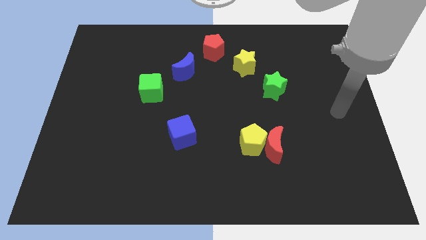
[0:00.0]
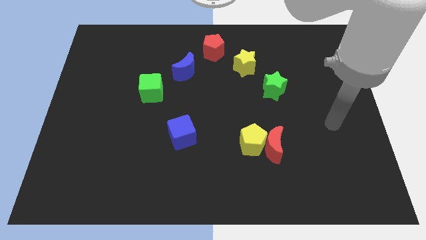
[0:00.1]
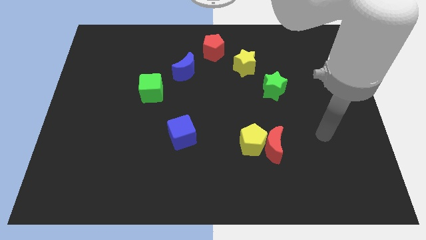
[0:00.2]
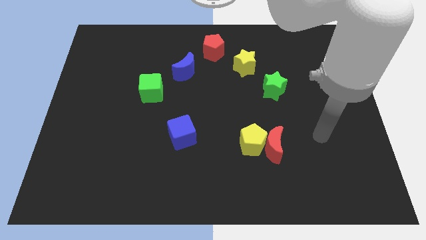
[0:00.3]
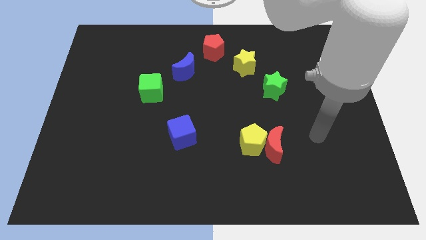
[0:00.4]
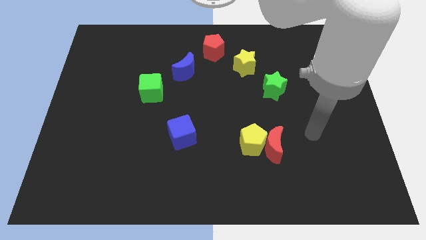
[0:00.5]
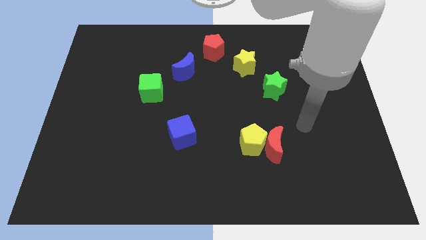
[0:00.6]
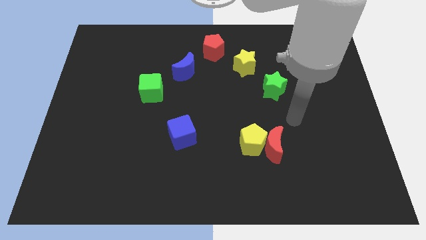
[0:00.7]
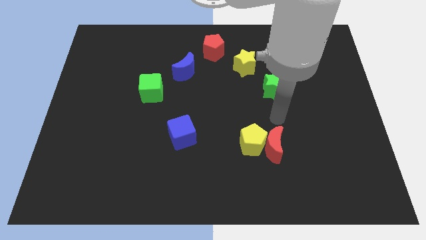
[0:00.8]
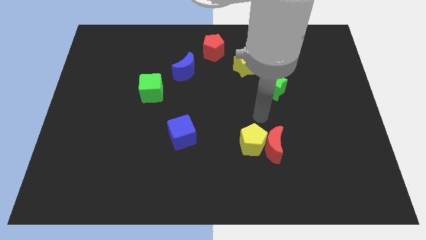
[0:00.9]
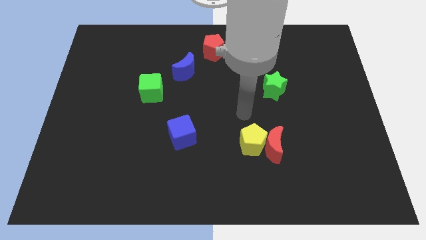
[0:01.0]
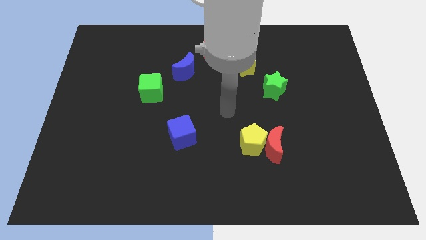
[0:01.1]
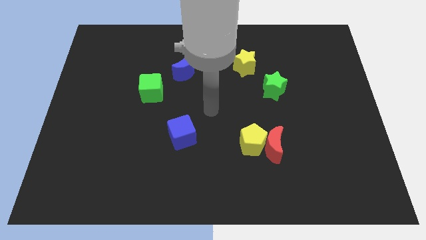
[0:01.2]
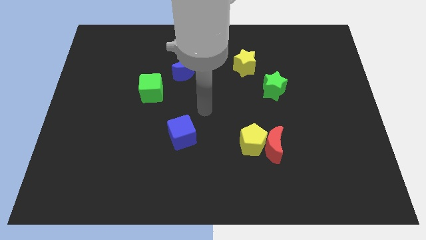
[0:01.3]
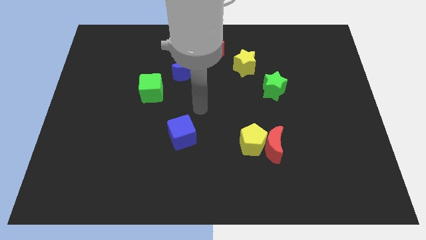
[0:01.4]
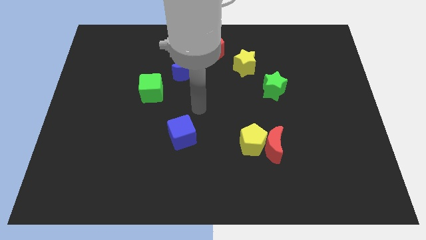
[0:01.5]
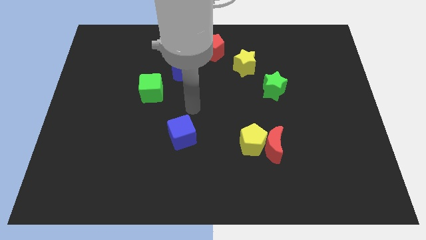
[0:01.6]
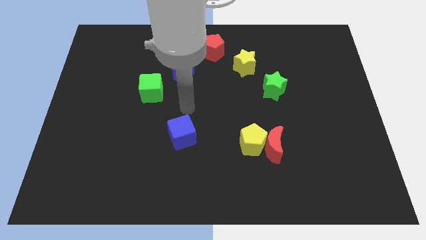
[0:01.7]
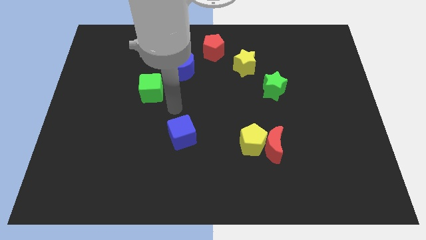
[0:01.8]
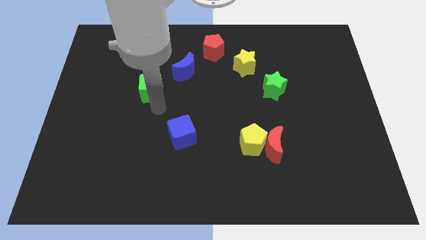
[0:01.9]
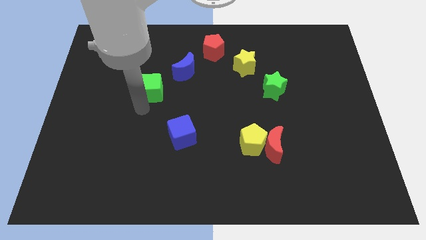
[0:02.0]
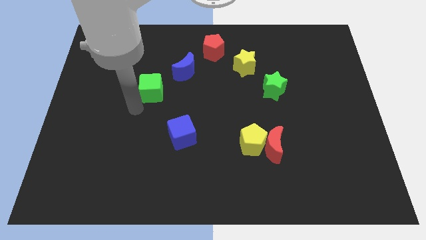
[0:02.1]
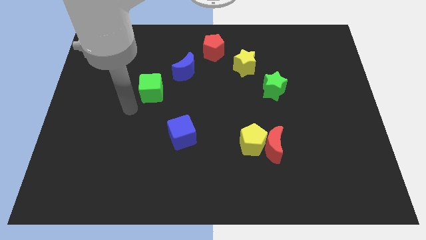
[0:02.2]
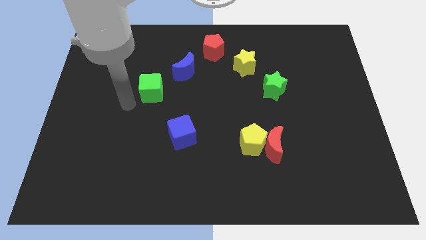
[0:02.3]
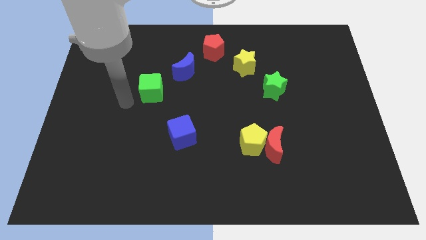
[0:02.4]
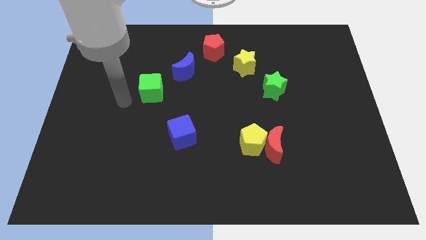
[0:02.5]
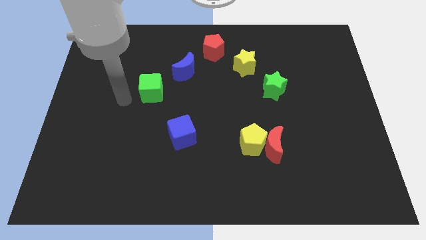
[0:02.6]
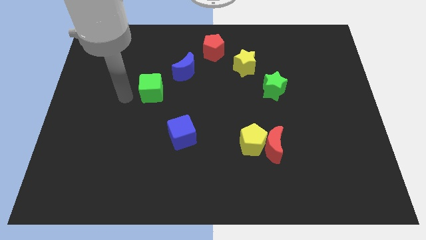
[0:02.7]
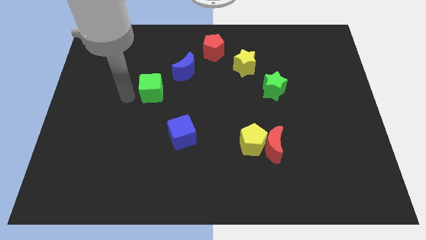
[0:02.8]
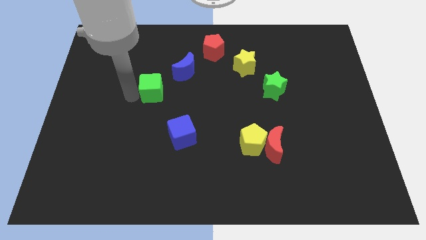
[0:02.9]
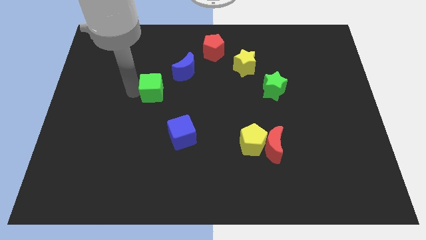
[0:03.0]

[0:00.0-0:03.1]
slide the arm to the left of green cube

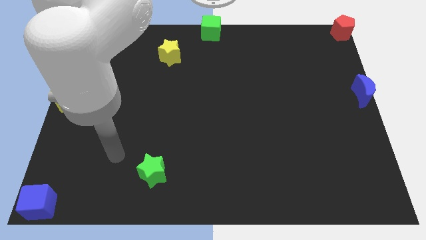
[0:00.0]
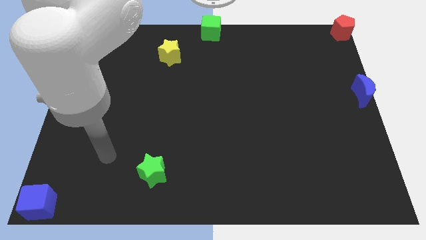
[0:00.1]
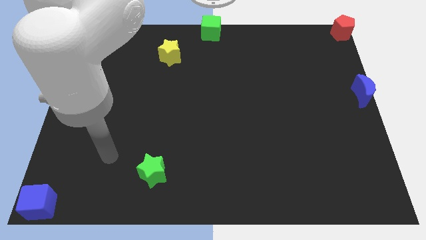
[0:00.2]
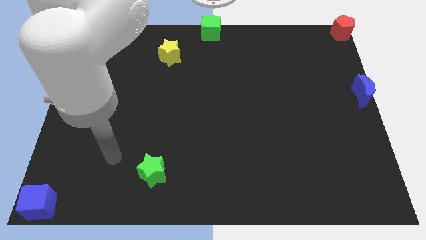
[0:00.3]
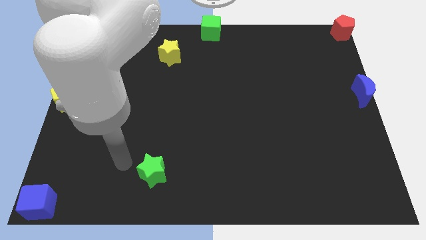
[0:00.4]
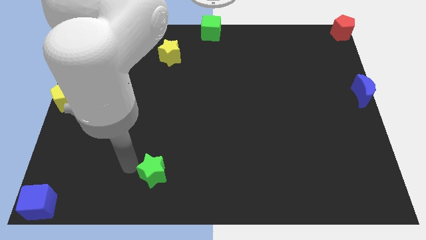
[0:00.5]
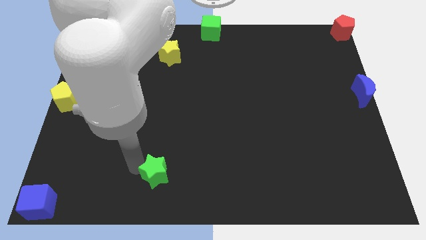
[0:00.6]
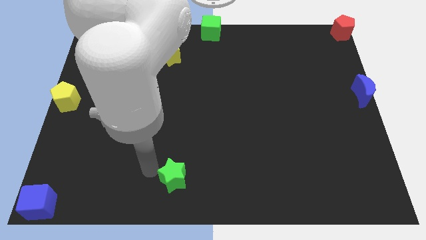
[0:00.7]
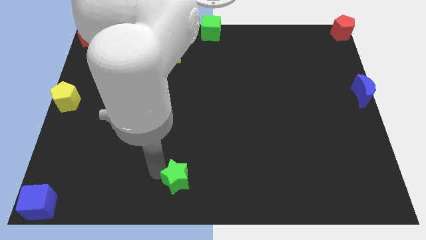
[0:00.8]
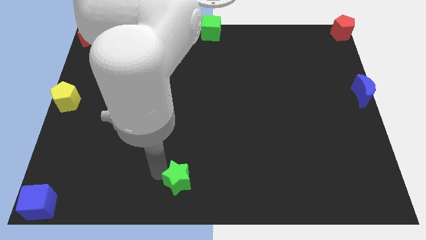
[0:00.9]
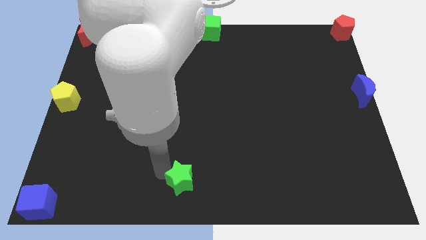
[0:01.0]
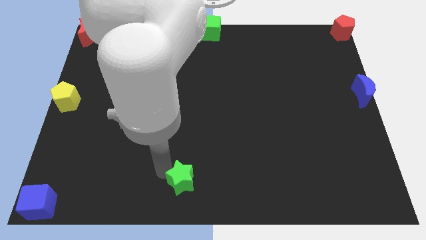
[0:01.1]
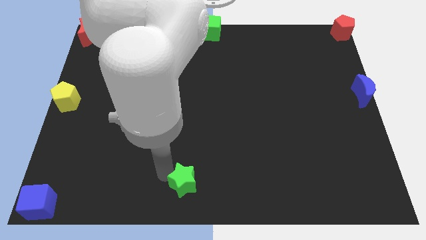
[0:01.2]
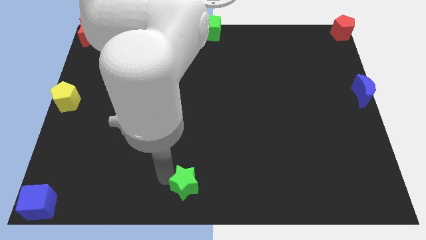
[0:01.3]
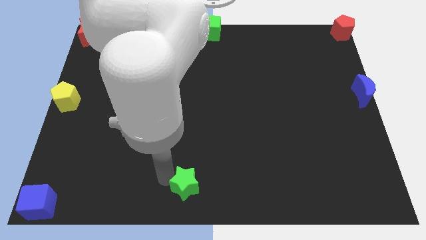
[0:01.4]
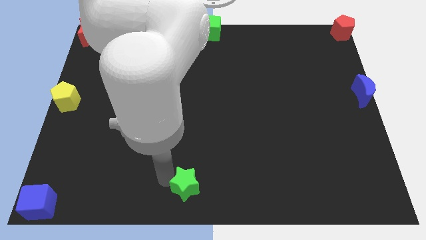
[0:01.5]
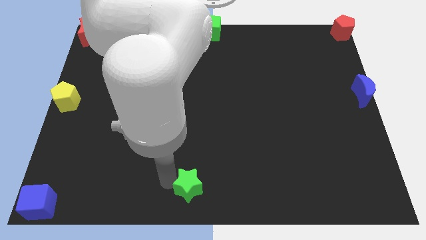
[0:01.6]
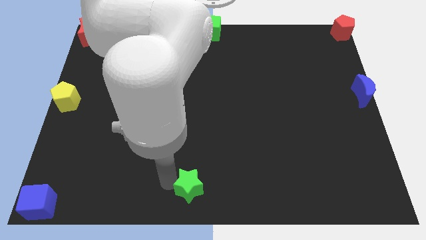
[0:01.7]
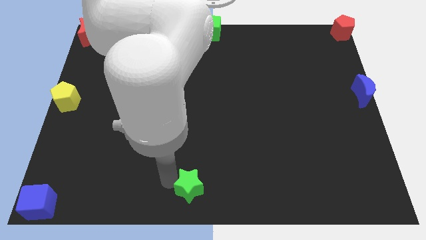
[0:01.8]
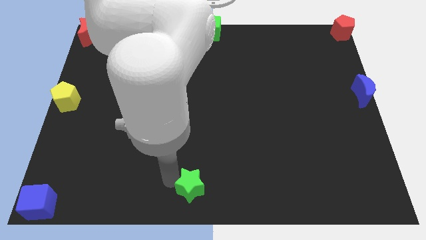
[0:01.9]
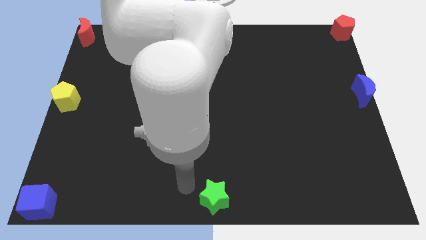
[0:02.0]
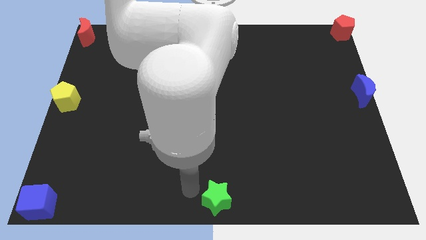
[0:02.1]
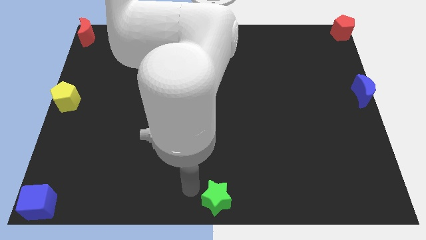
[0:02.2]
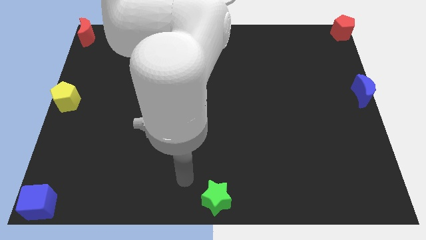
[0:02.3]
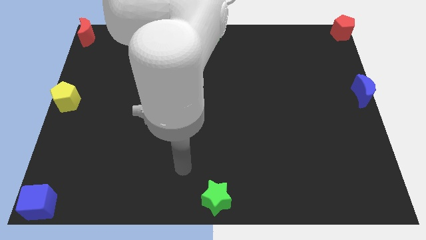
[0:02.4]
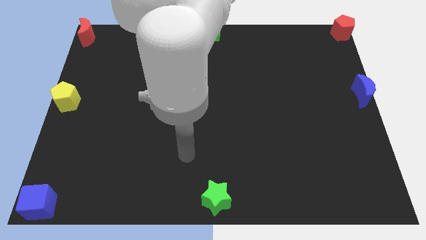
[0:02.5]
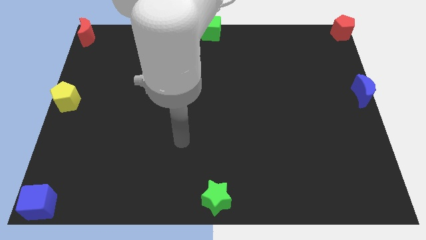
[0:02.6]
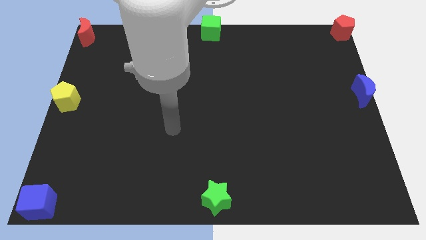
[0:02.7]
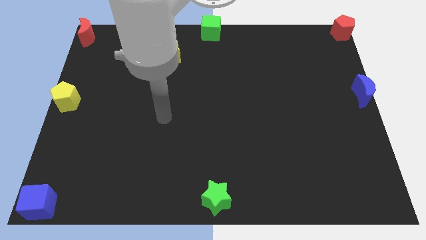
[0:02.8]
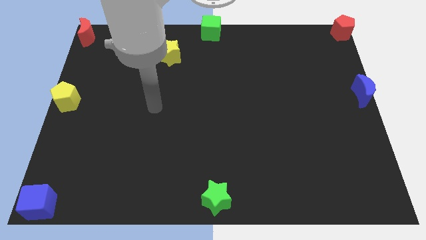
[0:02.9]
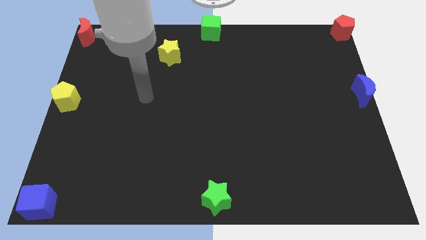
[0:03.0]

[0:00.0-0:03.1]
place the green star at bottom center of the board

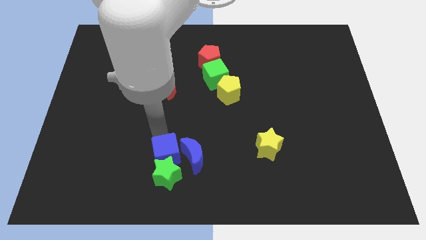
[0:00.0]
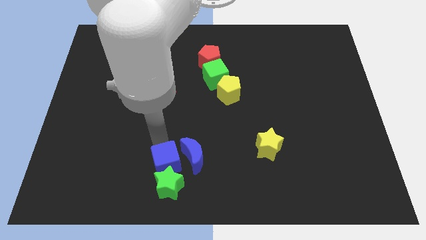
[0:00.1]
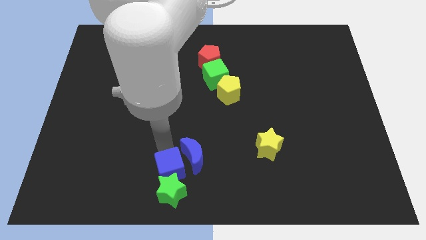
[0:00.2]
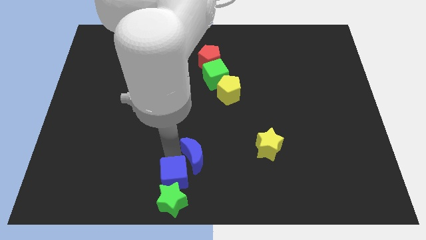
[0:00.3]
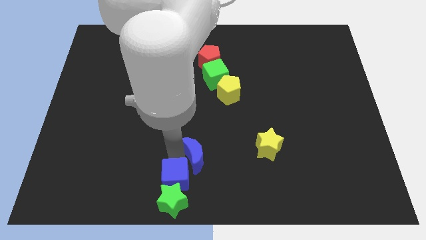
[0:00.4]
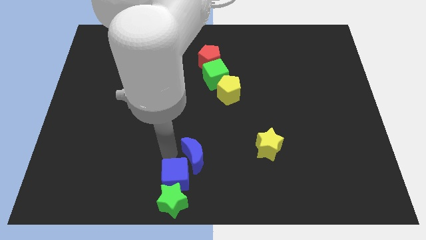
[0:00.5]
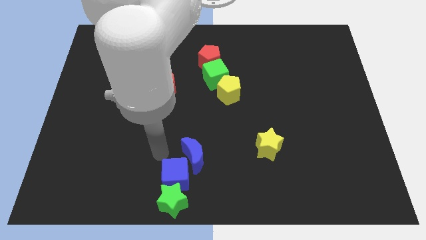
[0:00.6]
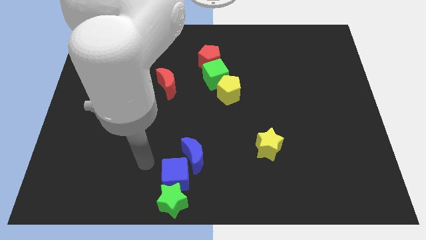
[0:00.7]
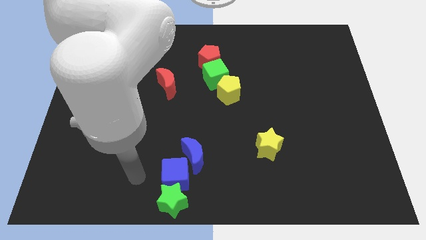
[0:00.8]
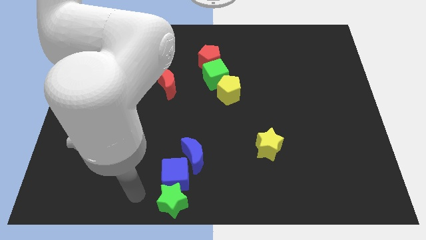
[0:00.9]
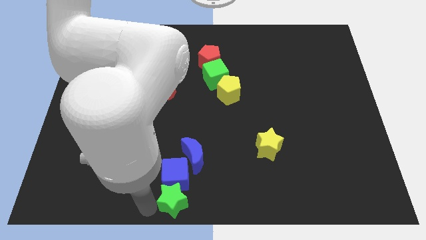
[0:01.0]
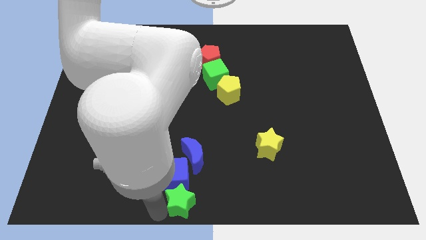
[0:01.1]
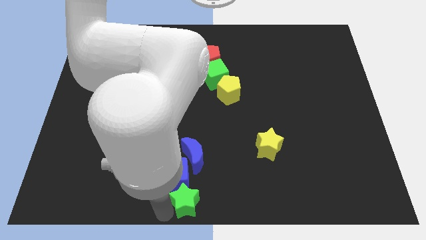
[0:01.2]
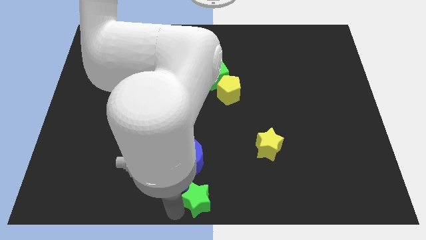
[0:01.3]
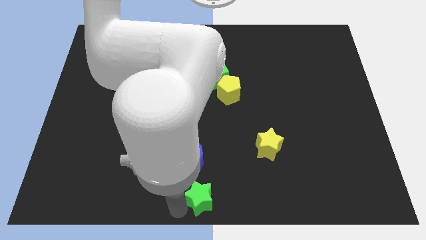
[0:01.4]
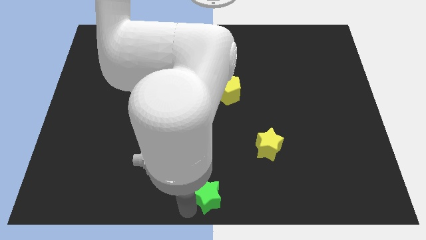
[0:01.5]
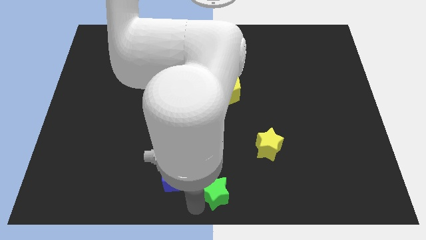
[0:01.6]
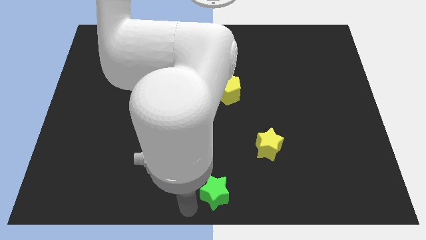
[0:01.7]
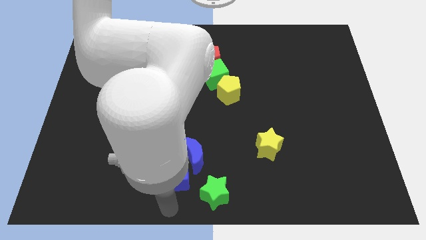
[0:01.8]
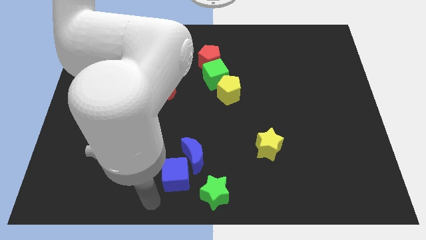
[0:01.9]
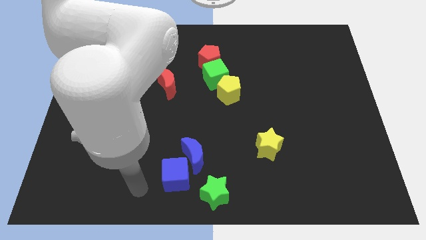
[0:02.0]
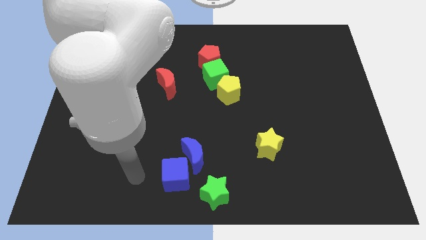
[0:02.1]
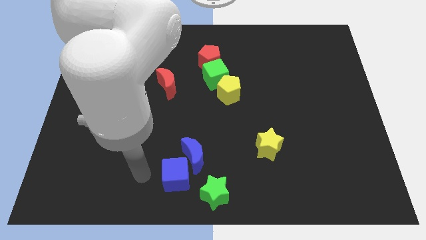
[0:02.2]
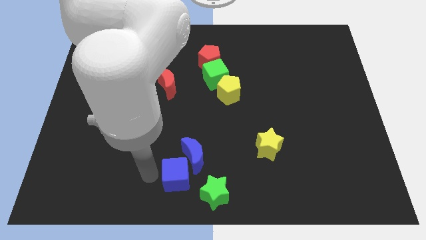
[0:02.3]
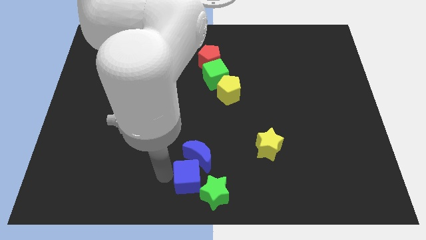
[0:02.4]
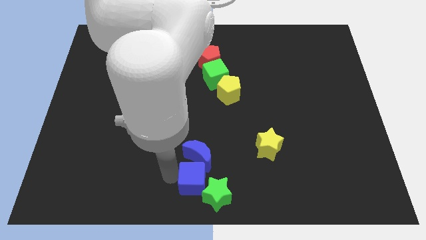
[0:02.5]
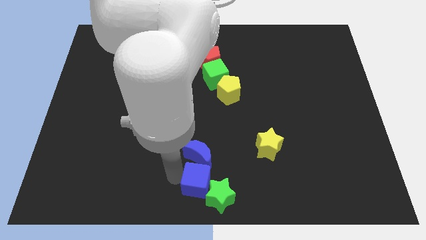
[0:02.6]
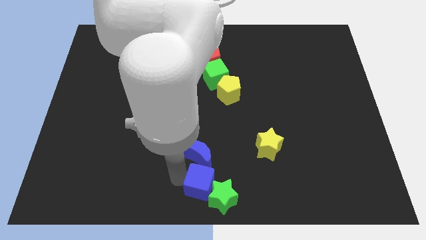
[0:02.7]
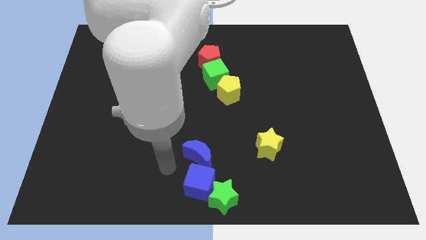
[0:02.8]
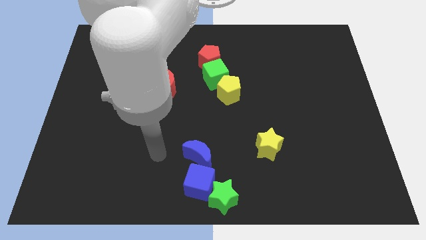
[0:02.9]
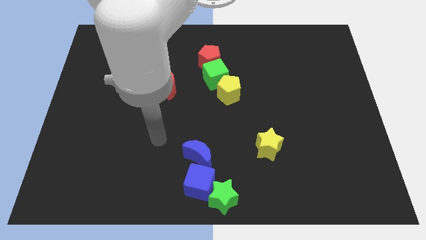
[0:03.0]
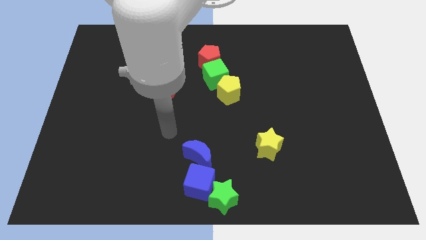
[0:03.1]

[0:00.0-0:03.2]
move the blue blocks and the green star close together
